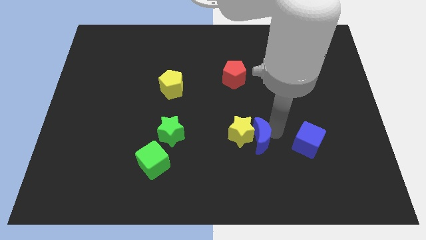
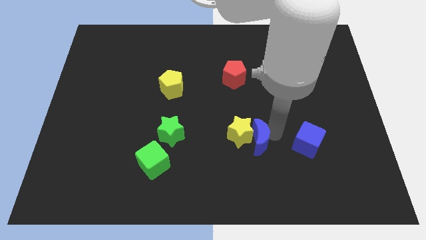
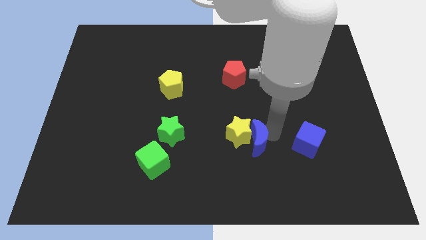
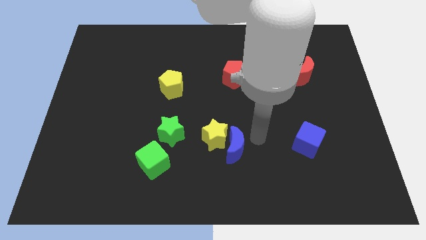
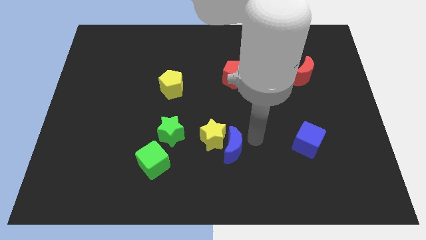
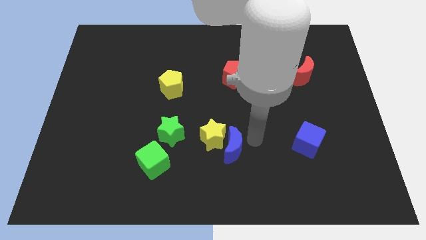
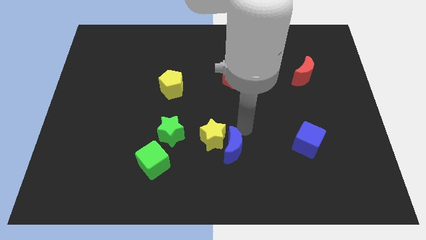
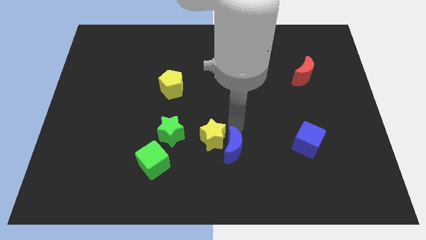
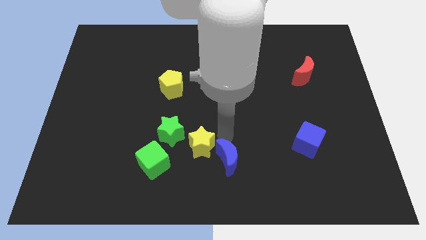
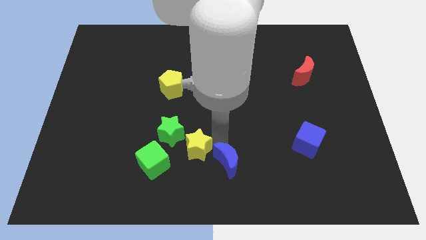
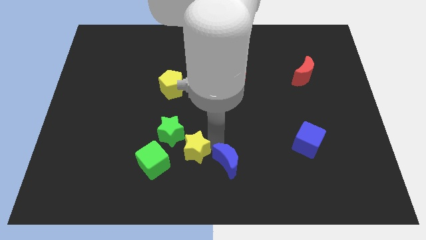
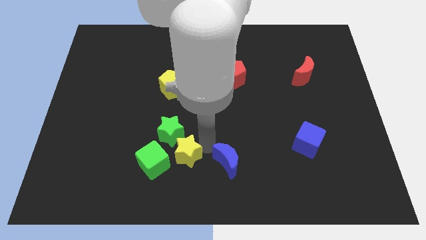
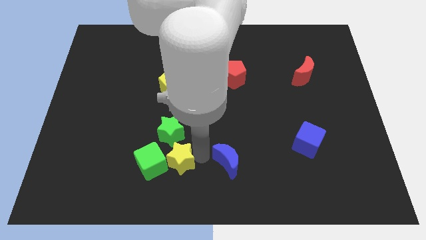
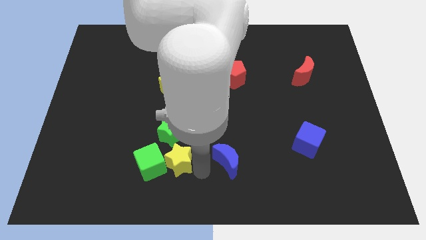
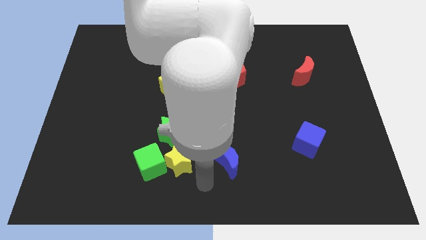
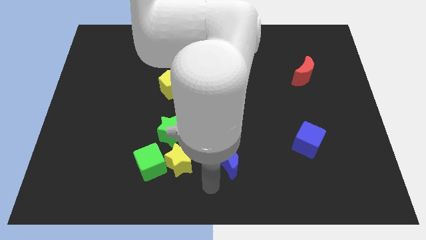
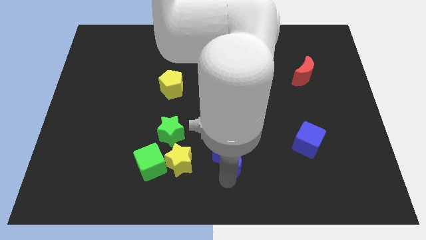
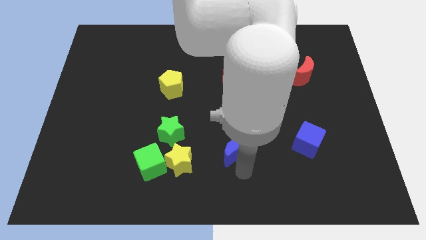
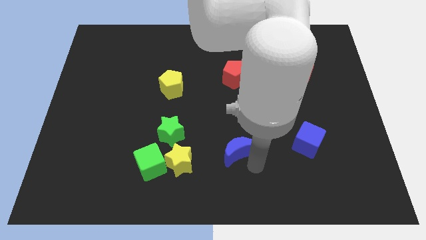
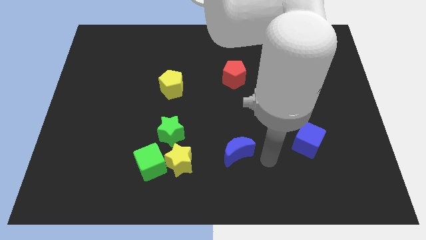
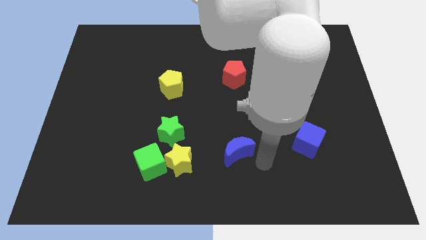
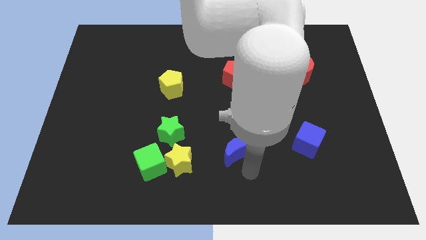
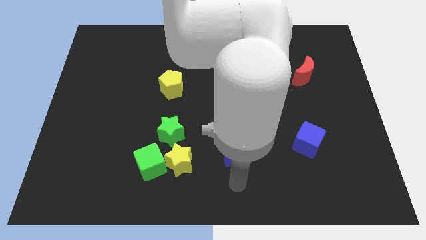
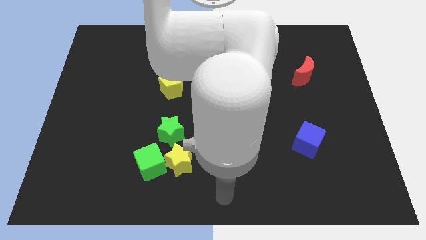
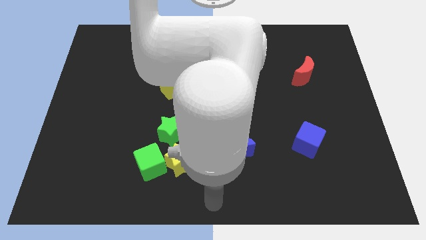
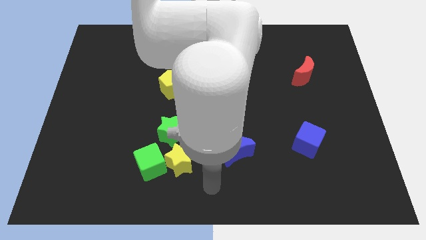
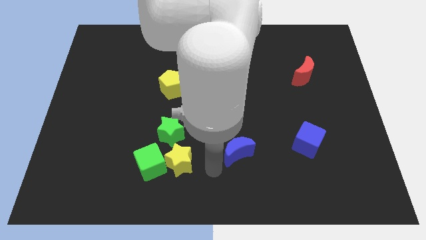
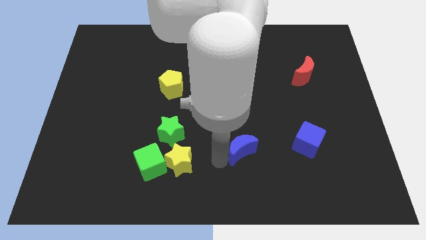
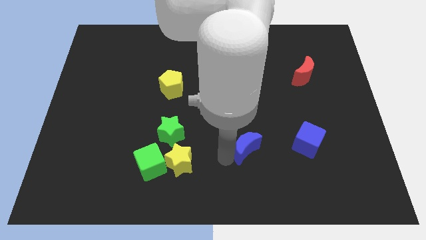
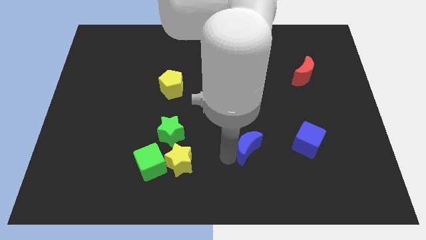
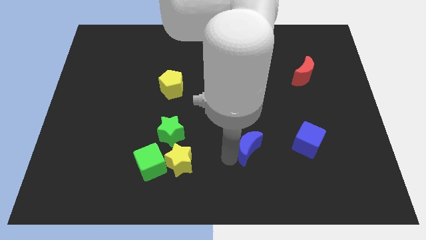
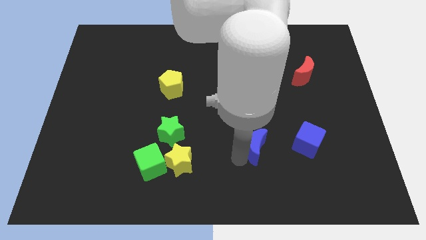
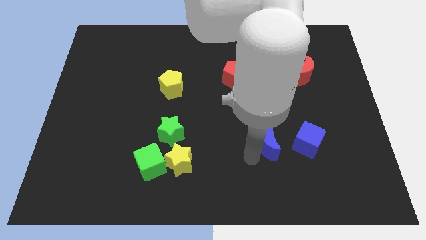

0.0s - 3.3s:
push the blue crescent right to the blue cube

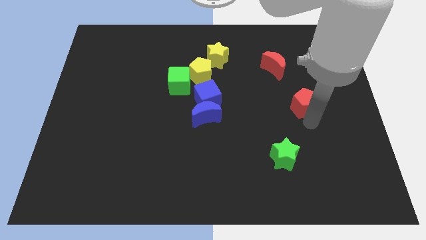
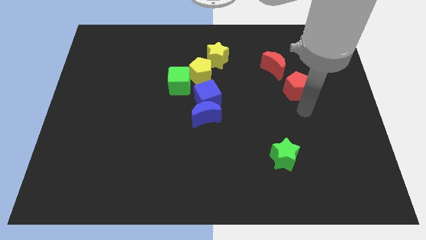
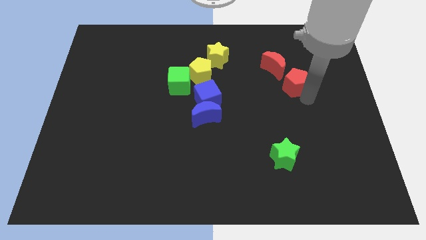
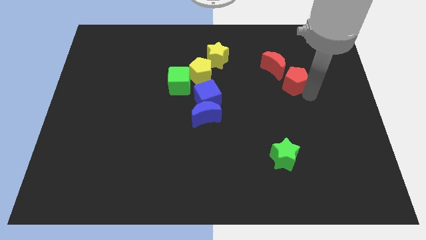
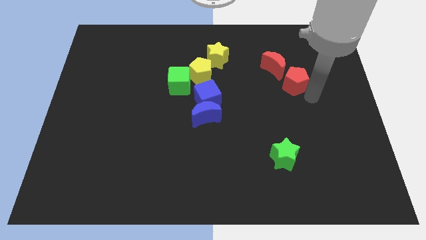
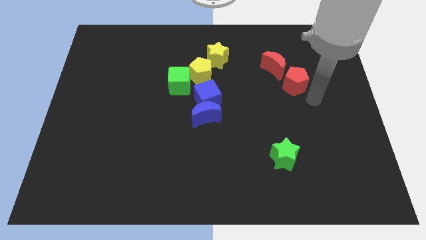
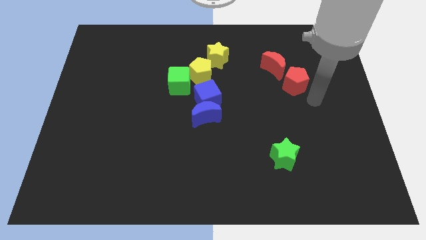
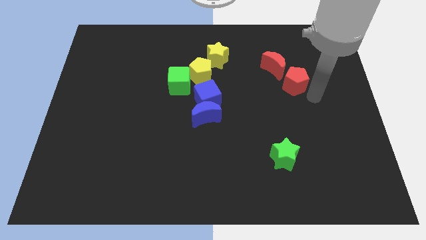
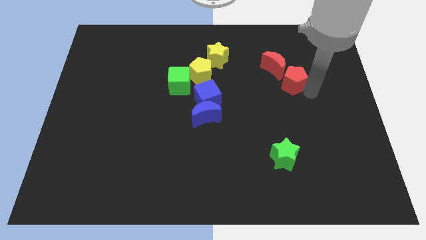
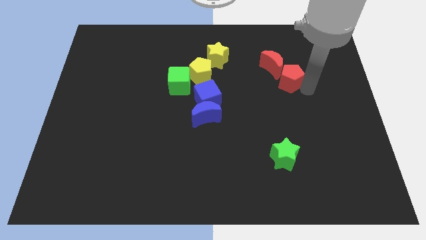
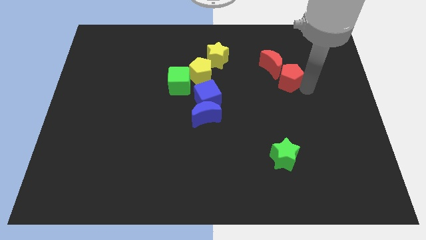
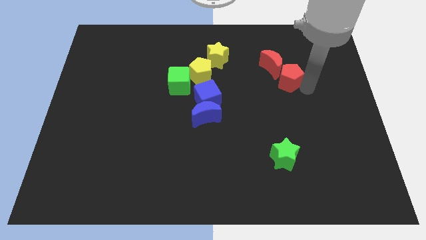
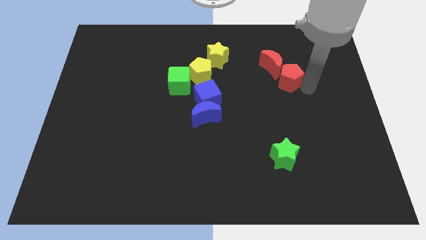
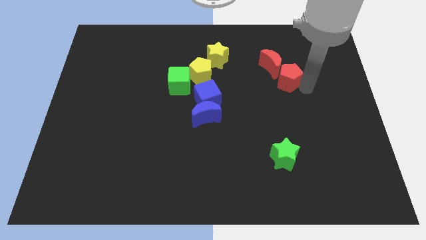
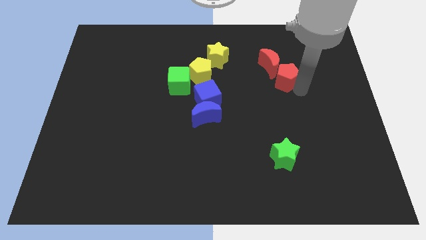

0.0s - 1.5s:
move the red pentagon below to the red moon

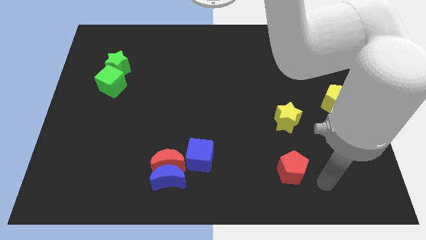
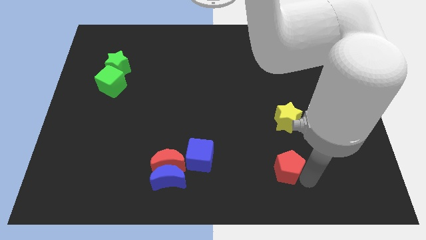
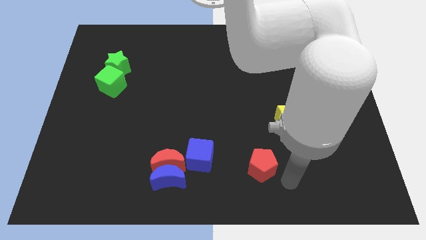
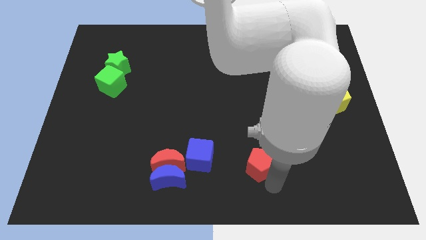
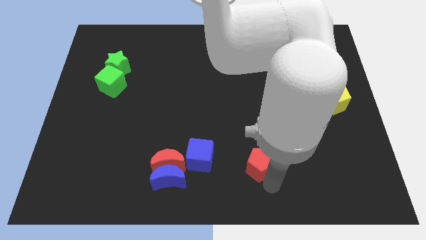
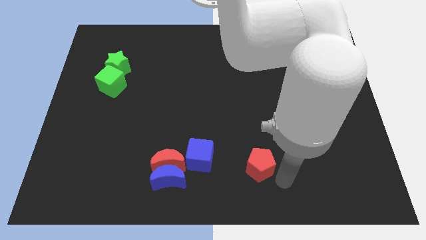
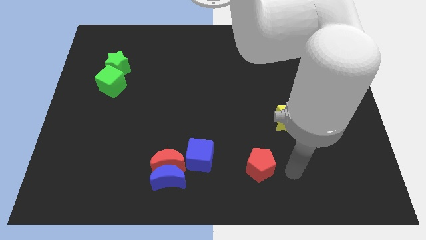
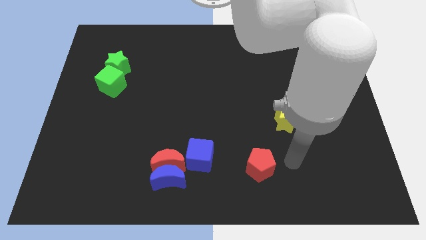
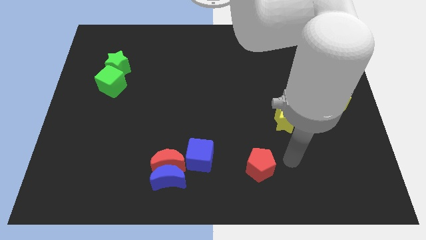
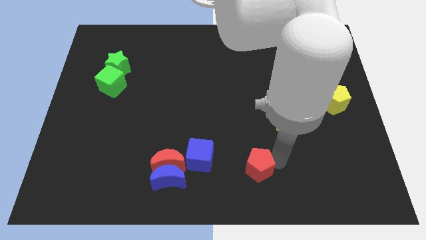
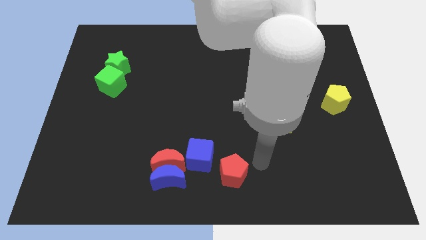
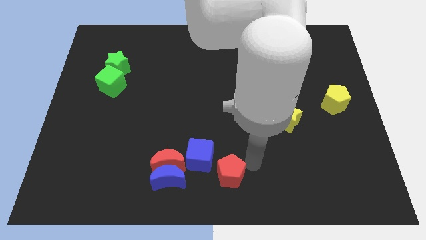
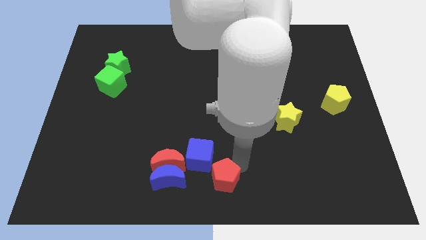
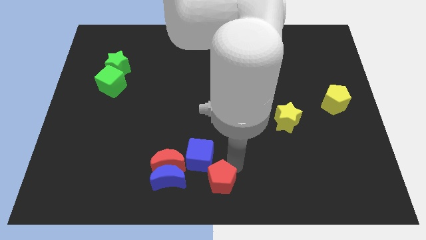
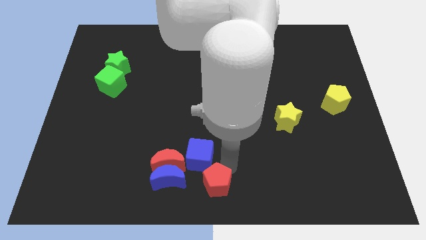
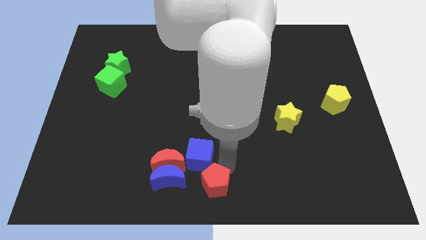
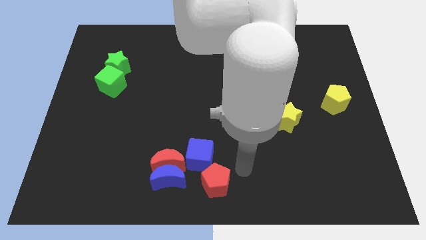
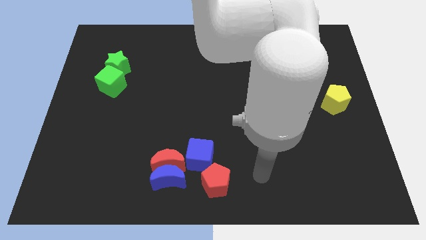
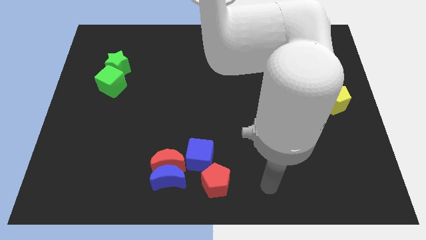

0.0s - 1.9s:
put the red pentagon to the bottom right of the blue cube

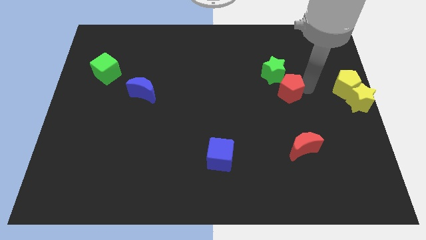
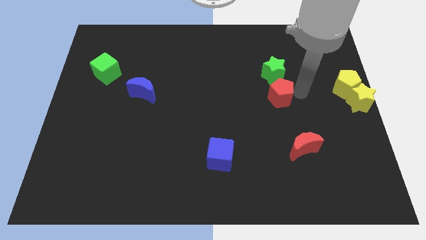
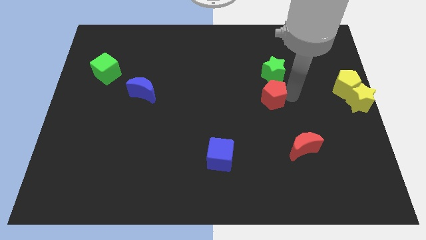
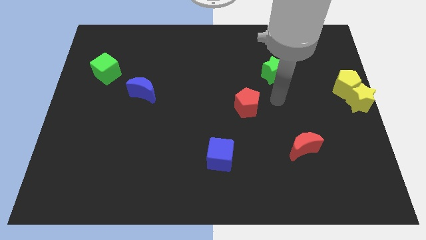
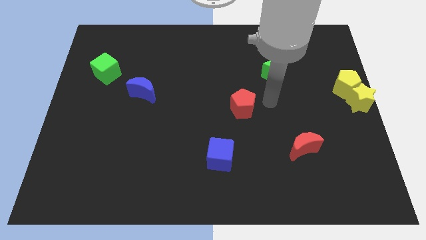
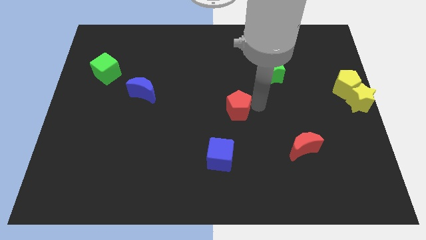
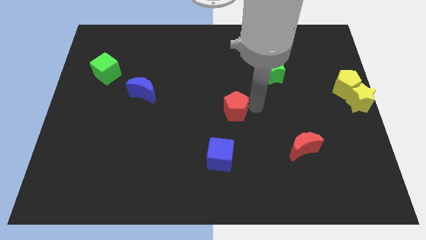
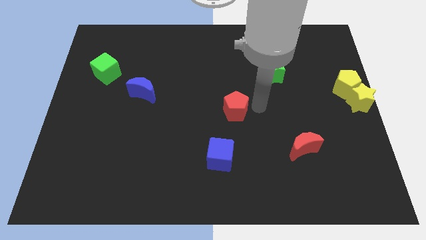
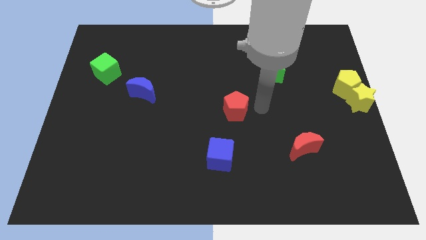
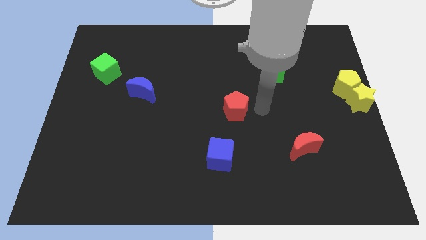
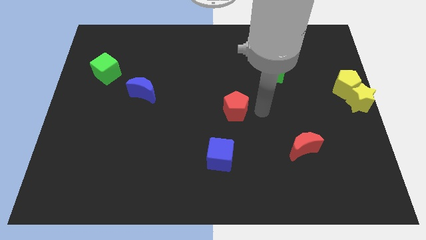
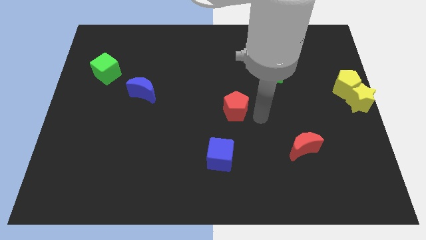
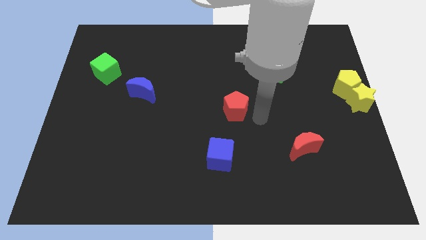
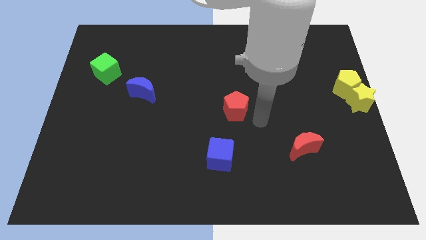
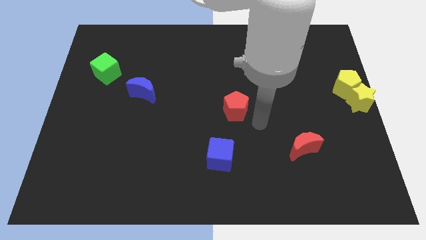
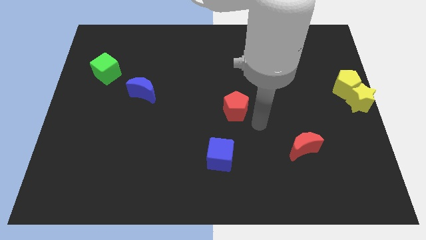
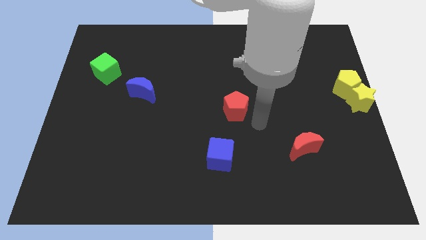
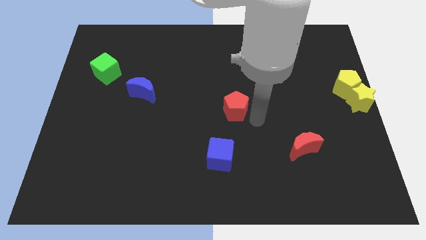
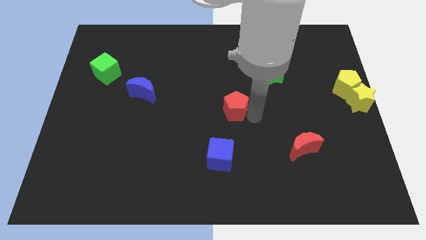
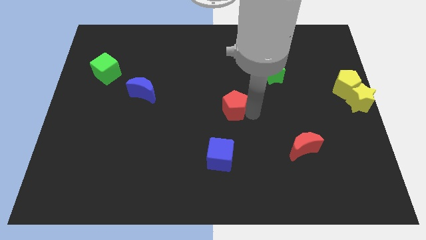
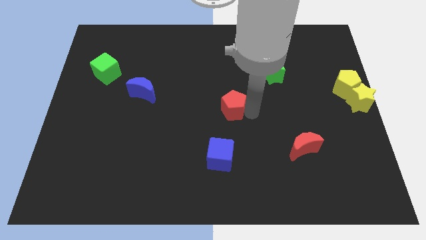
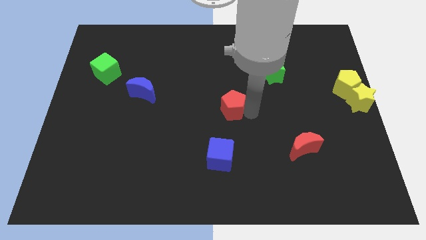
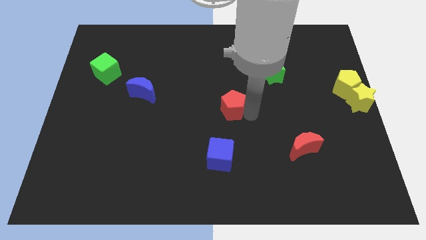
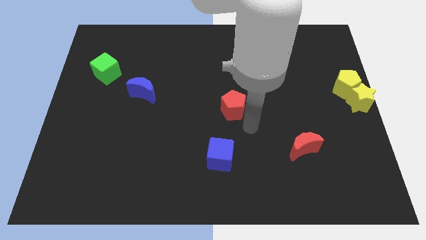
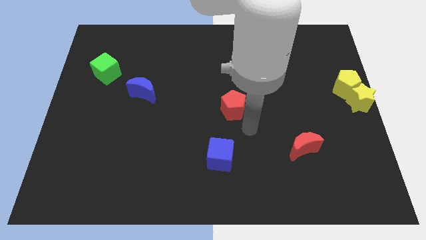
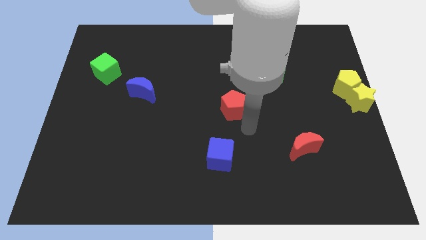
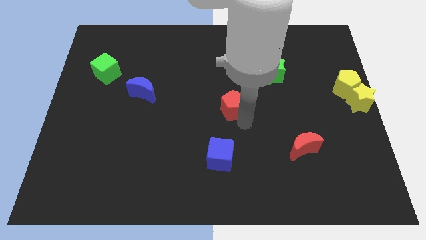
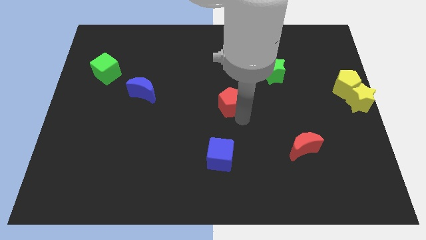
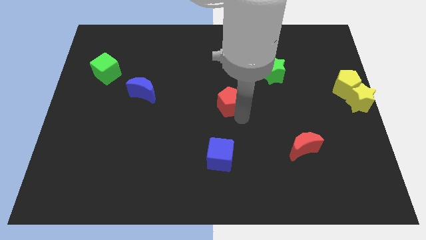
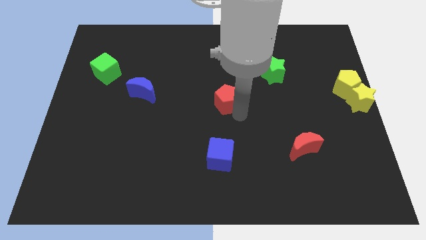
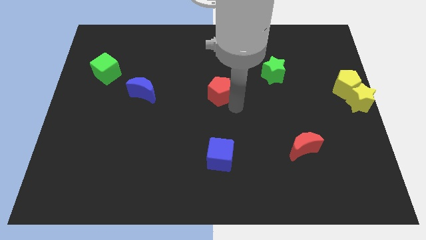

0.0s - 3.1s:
move red pentagon diagonally bottom left to the green star
